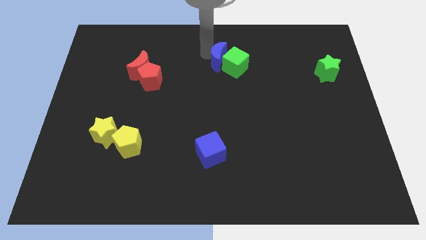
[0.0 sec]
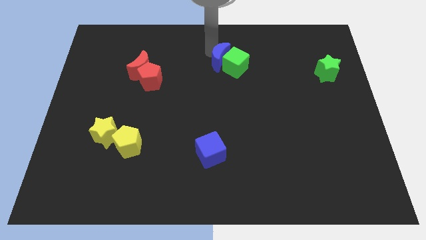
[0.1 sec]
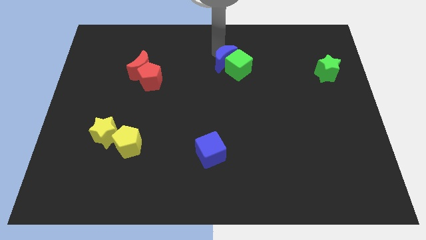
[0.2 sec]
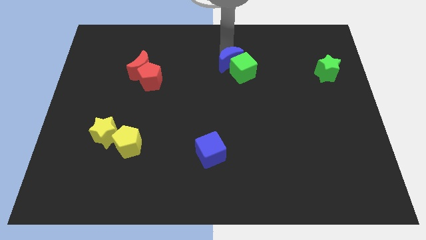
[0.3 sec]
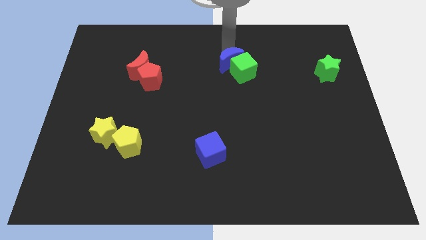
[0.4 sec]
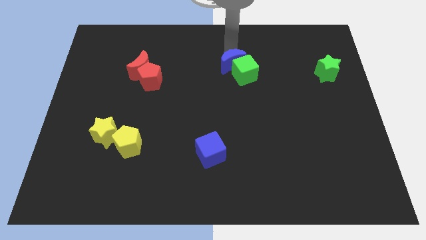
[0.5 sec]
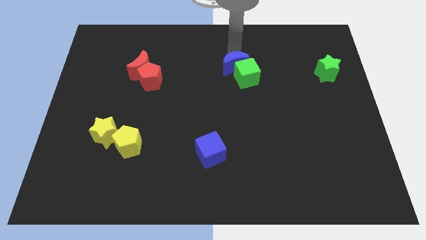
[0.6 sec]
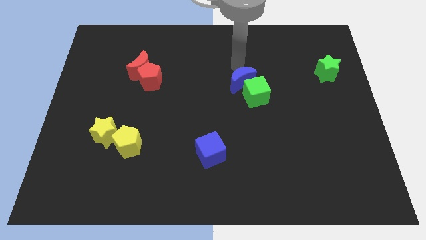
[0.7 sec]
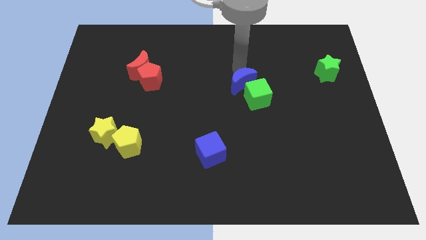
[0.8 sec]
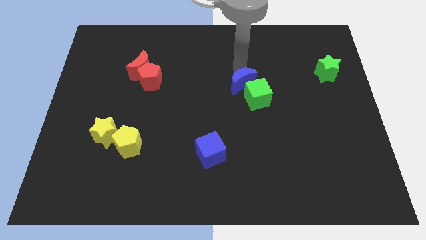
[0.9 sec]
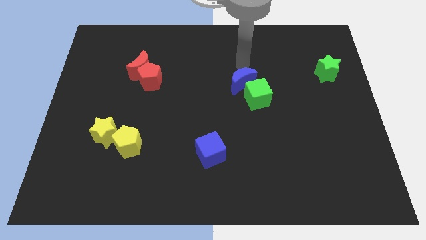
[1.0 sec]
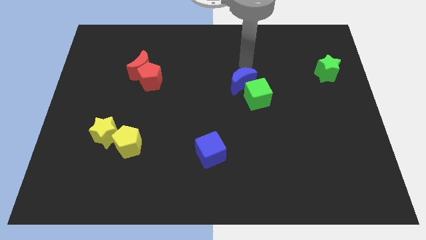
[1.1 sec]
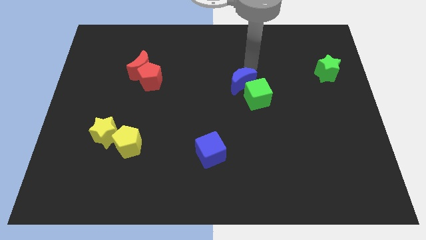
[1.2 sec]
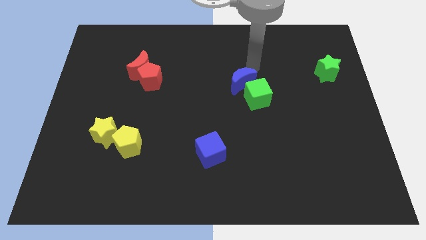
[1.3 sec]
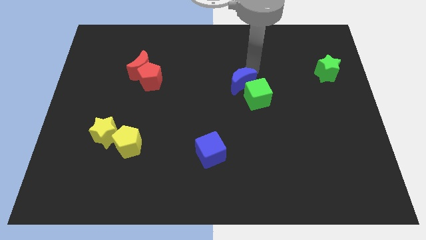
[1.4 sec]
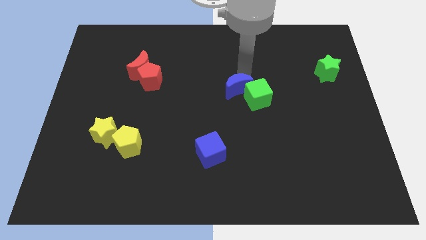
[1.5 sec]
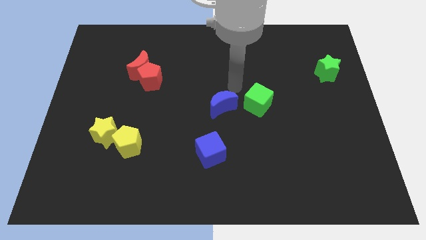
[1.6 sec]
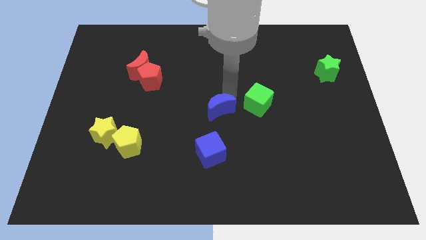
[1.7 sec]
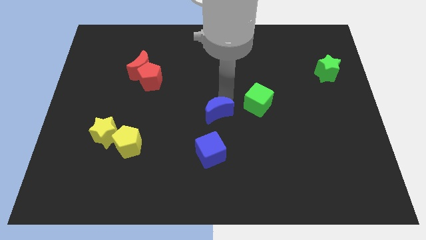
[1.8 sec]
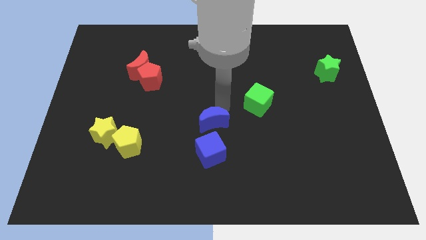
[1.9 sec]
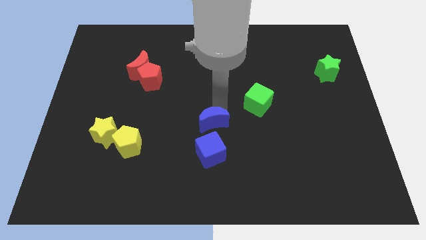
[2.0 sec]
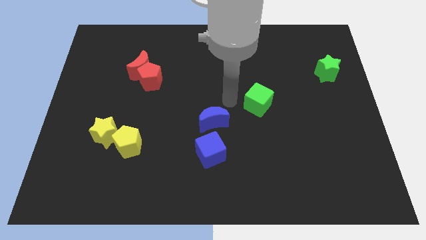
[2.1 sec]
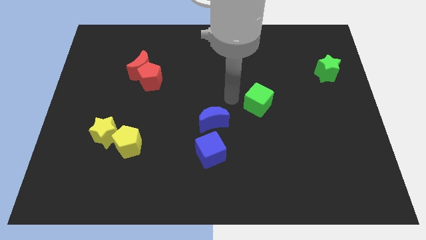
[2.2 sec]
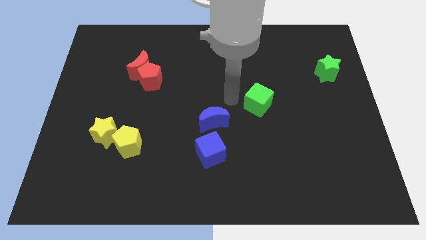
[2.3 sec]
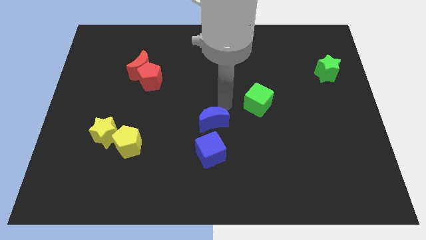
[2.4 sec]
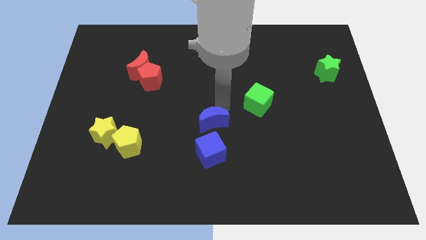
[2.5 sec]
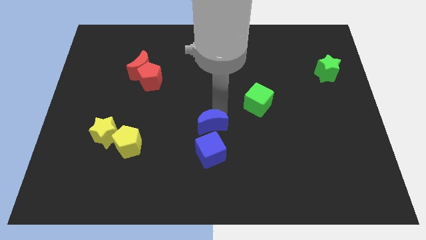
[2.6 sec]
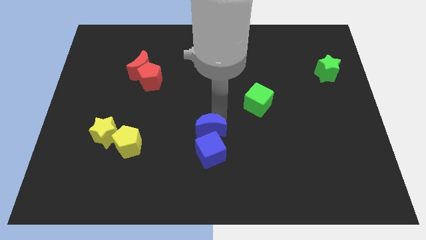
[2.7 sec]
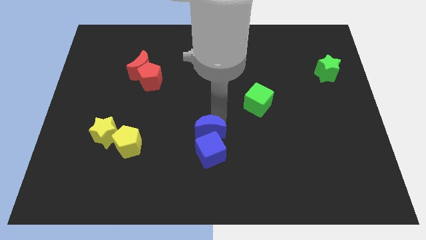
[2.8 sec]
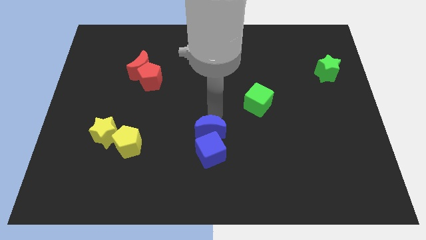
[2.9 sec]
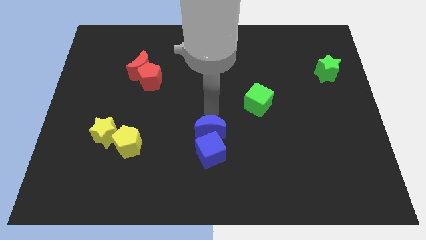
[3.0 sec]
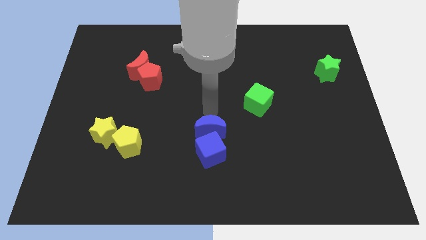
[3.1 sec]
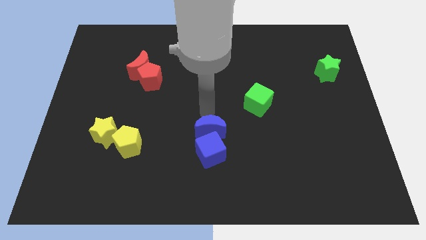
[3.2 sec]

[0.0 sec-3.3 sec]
push the blue moon close to the top side of the blue cube

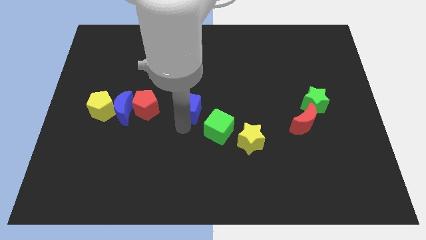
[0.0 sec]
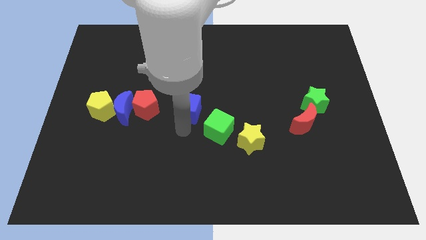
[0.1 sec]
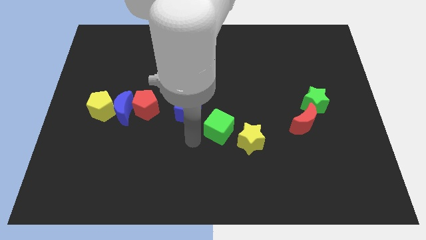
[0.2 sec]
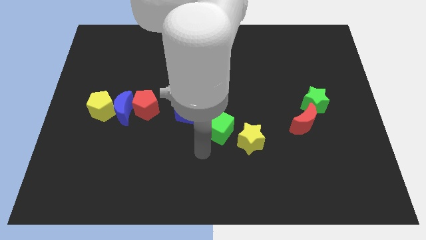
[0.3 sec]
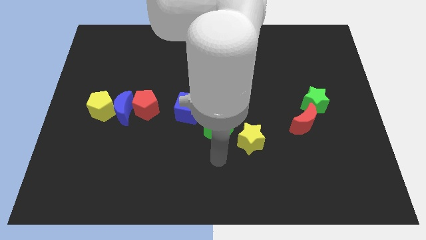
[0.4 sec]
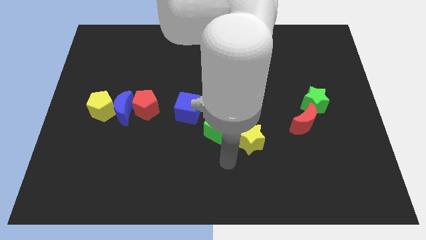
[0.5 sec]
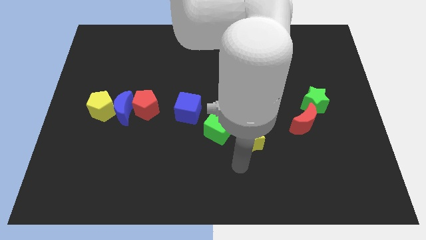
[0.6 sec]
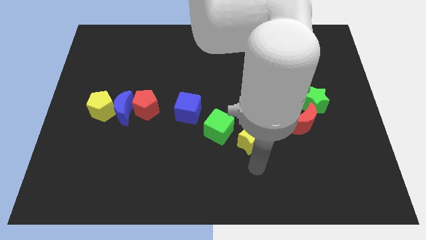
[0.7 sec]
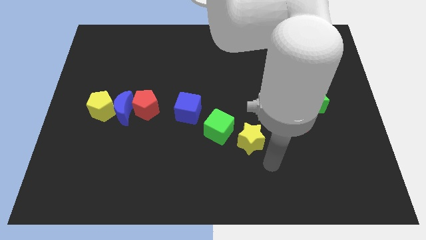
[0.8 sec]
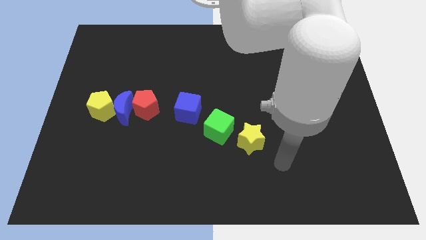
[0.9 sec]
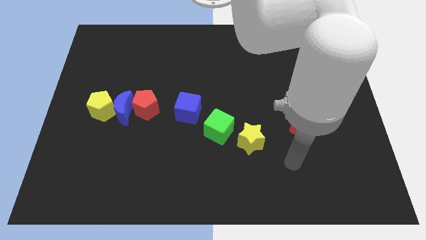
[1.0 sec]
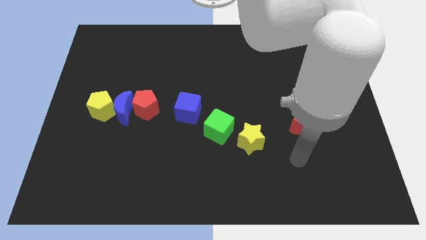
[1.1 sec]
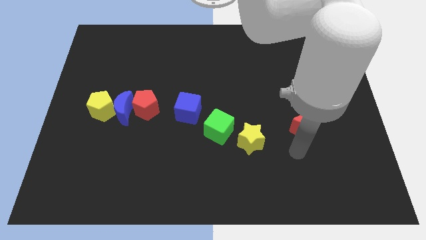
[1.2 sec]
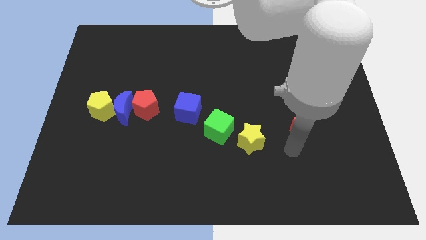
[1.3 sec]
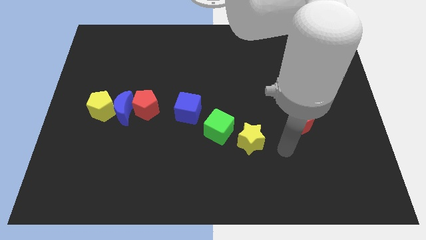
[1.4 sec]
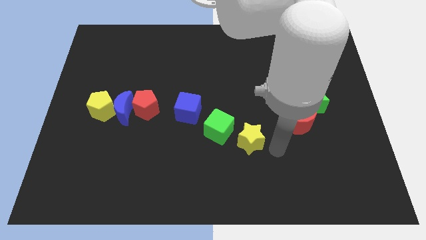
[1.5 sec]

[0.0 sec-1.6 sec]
point your arm to the right side of yellow star

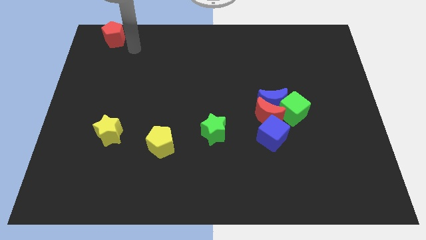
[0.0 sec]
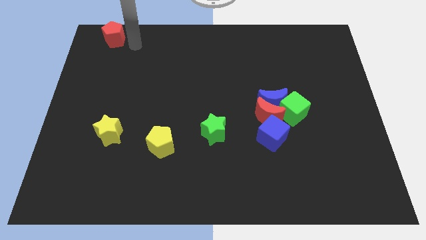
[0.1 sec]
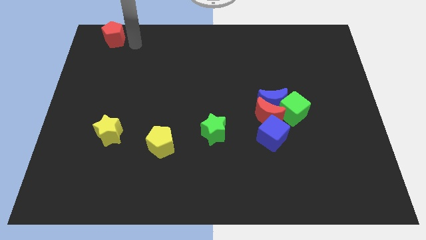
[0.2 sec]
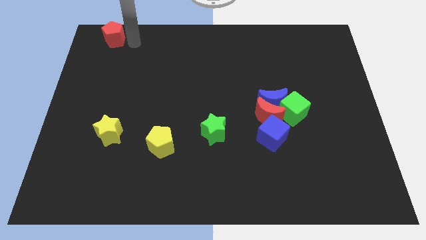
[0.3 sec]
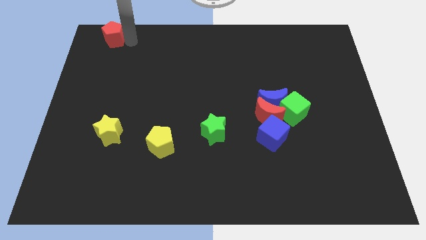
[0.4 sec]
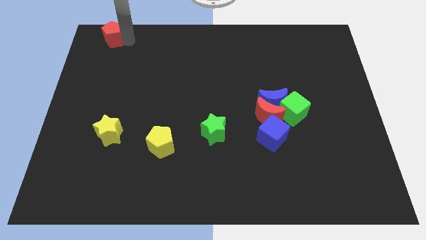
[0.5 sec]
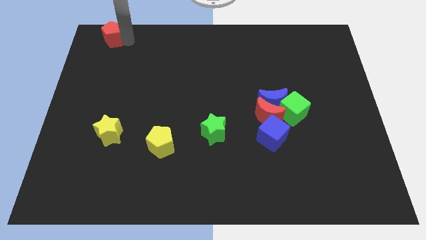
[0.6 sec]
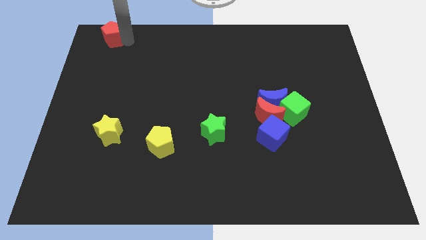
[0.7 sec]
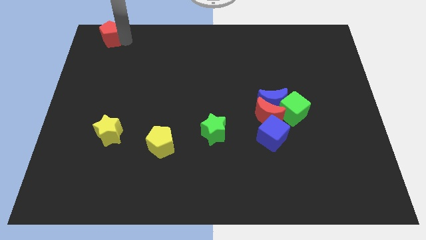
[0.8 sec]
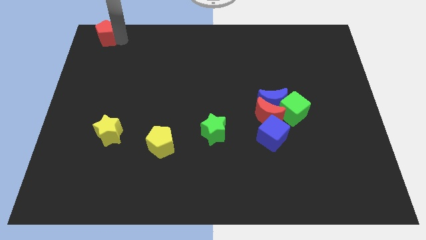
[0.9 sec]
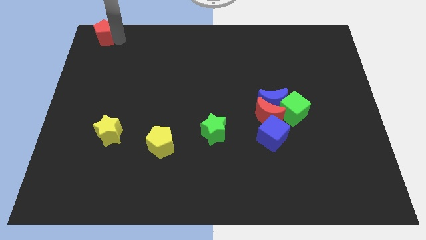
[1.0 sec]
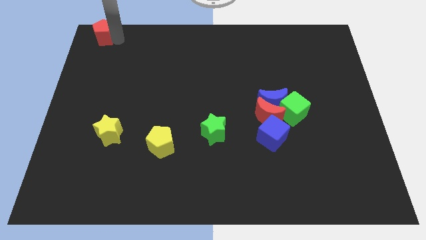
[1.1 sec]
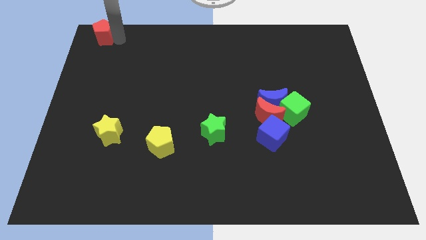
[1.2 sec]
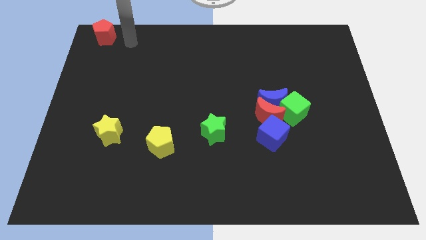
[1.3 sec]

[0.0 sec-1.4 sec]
move the red pentagon towards the top left corner of the board

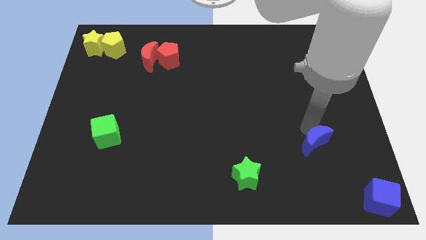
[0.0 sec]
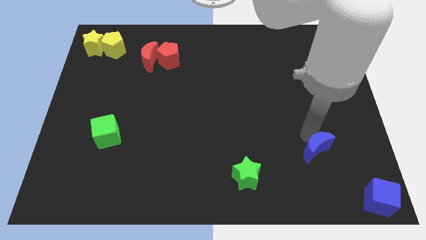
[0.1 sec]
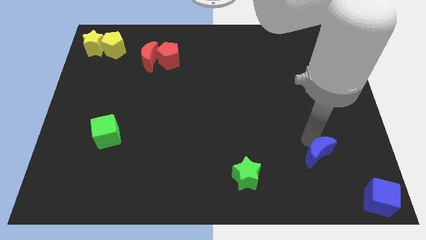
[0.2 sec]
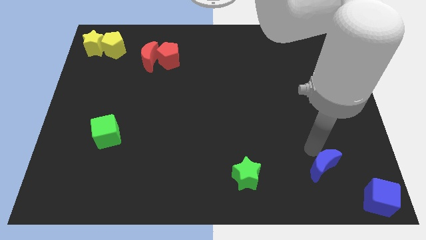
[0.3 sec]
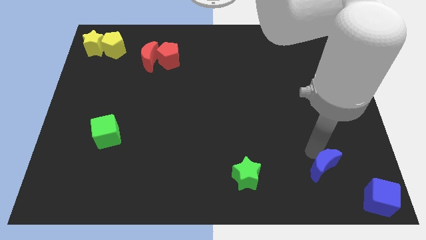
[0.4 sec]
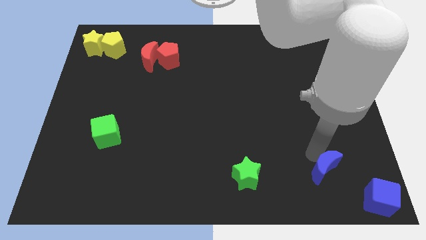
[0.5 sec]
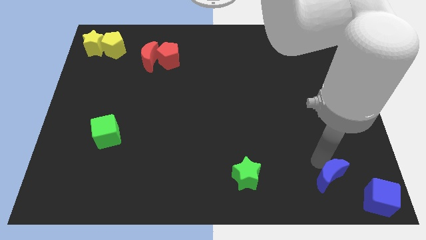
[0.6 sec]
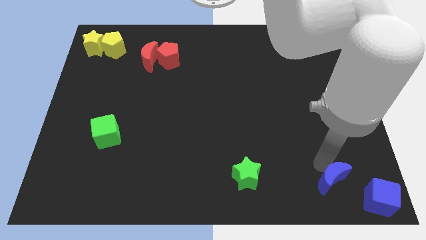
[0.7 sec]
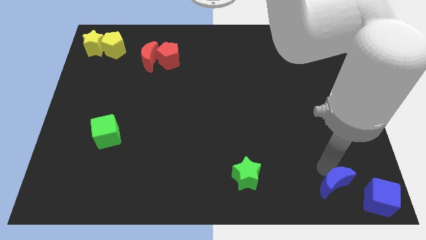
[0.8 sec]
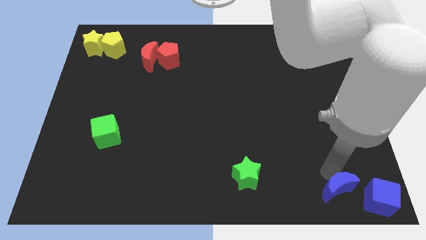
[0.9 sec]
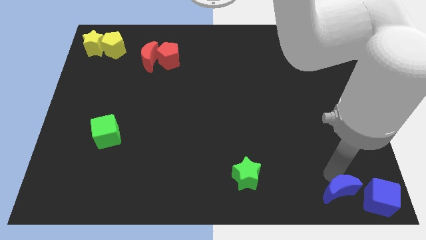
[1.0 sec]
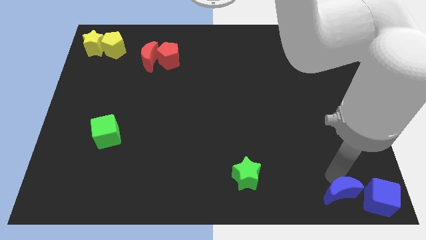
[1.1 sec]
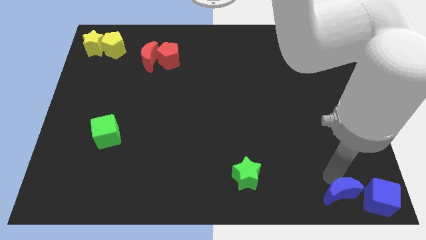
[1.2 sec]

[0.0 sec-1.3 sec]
put the blue crescent to the left side of blue cube

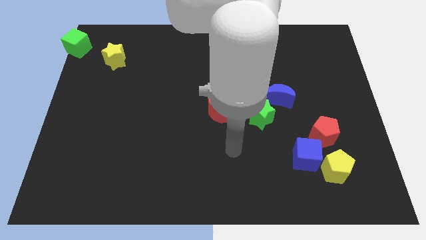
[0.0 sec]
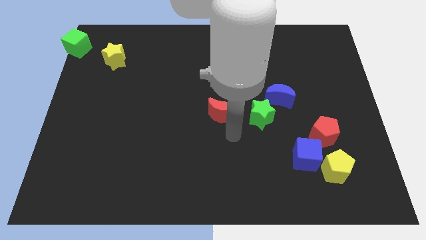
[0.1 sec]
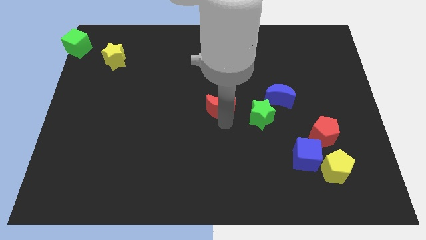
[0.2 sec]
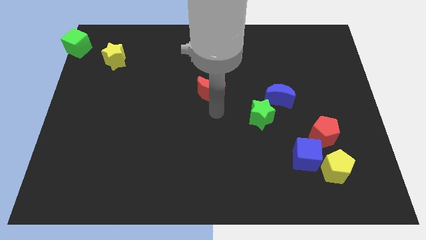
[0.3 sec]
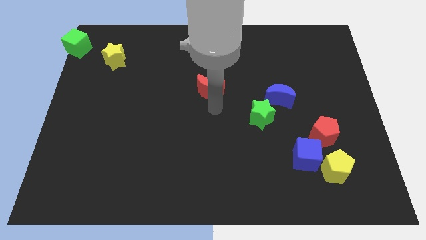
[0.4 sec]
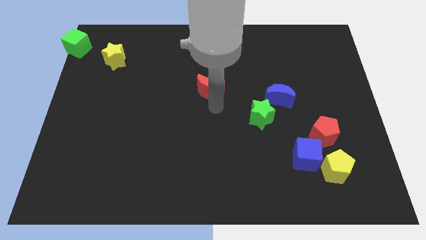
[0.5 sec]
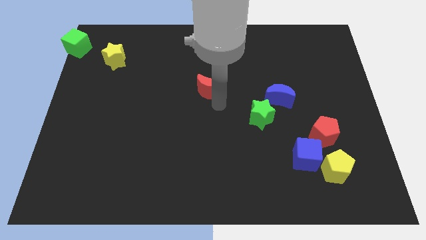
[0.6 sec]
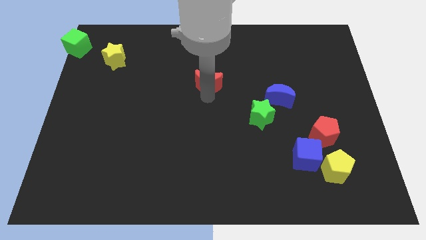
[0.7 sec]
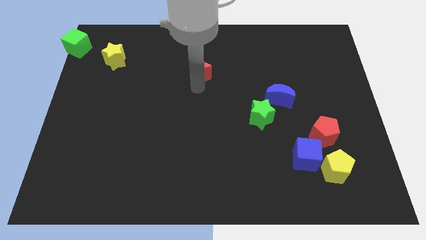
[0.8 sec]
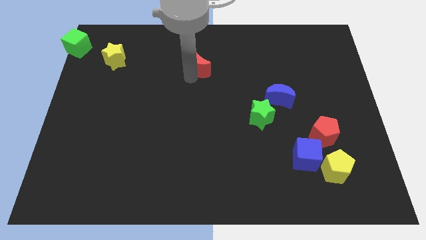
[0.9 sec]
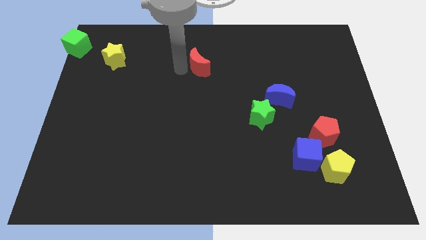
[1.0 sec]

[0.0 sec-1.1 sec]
slide red moon to right of yellow star
